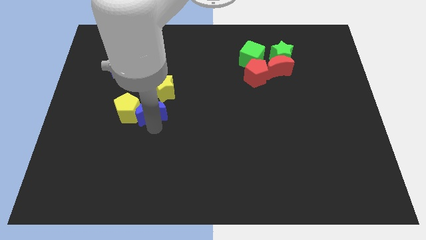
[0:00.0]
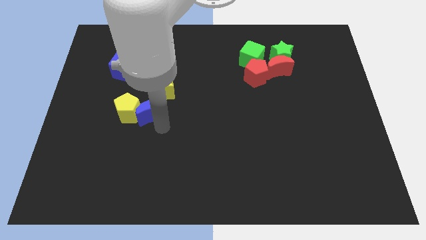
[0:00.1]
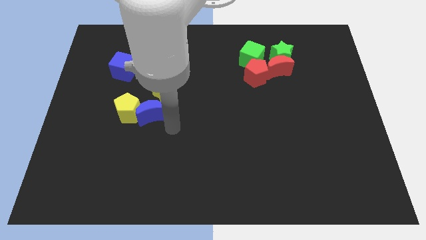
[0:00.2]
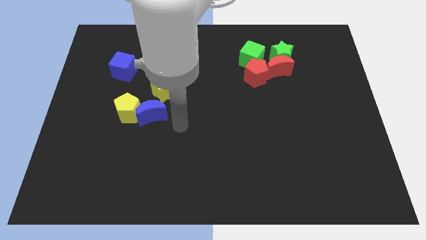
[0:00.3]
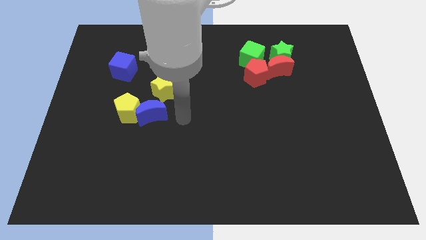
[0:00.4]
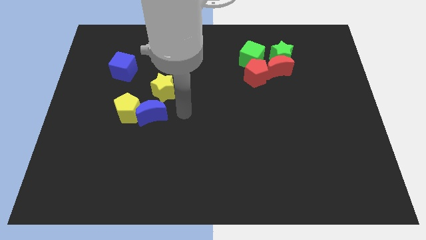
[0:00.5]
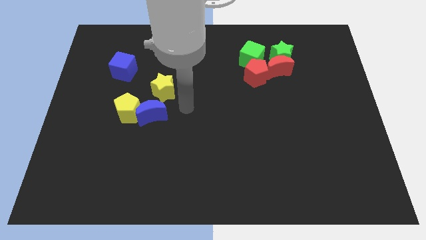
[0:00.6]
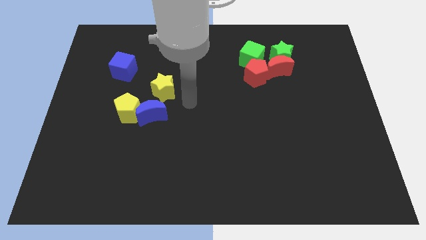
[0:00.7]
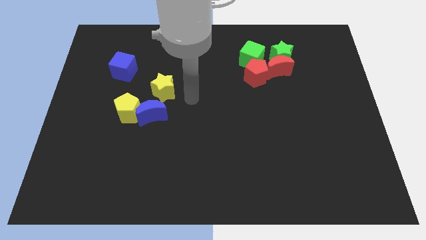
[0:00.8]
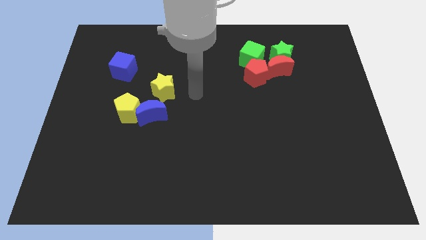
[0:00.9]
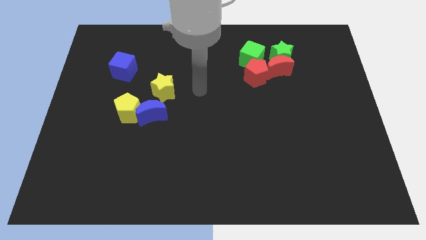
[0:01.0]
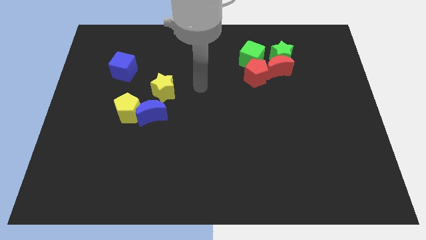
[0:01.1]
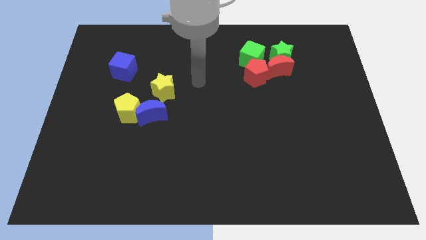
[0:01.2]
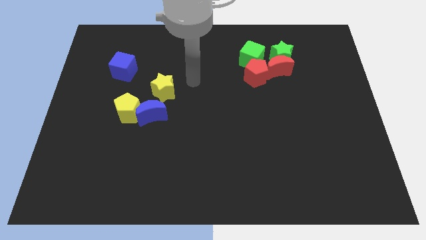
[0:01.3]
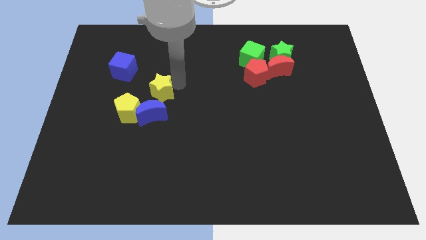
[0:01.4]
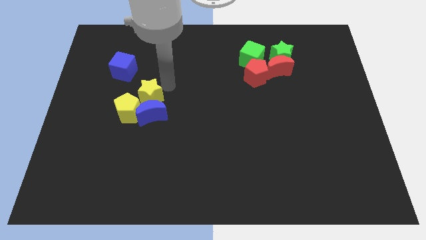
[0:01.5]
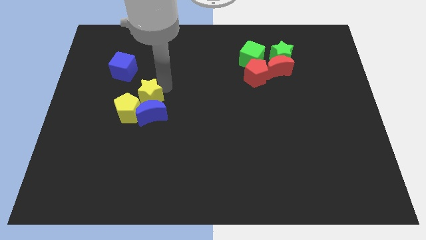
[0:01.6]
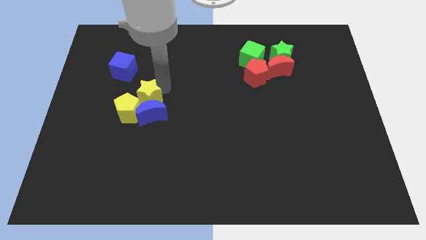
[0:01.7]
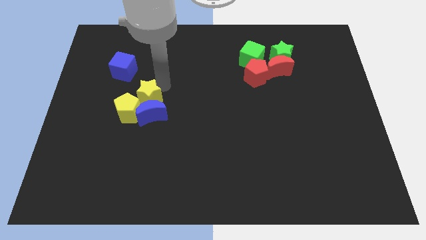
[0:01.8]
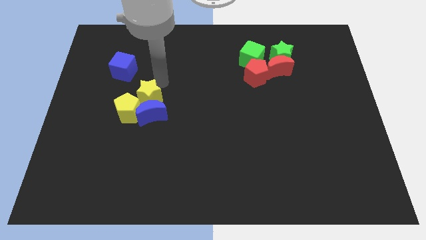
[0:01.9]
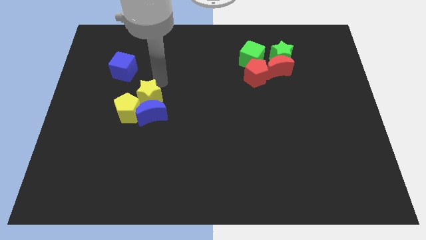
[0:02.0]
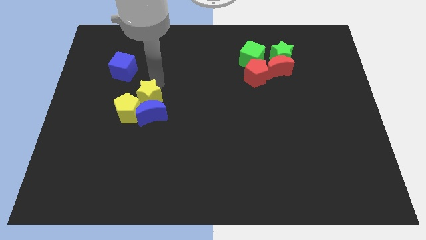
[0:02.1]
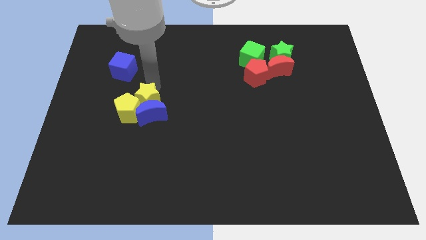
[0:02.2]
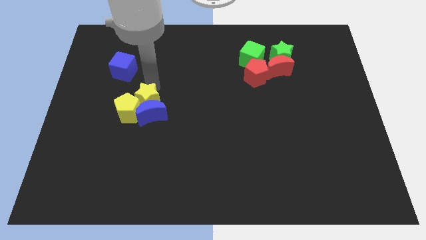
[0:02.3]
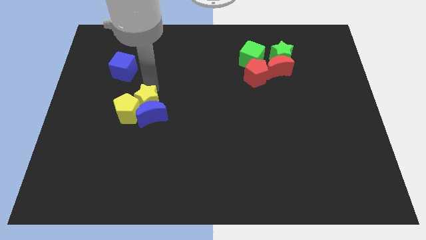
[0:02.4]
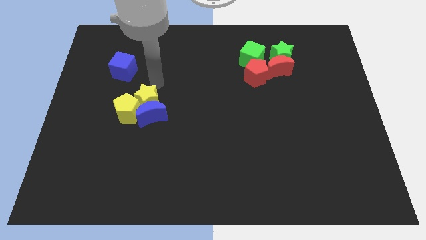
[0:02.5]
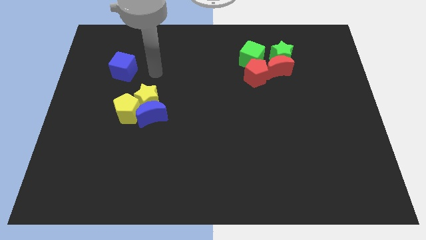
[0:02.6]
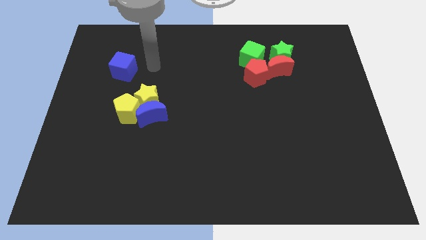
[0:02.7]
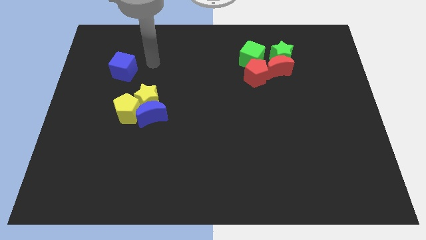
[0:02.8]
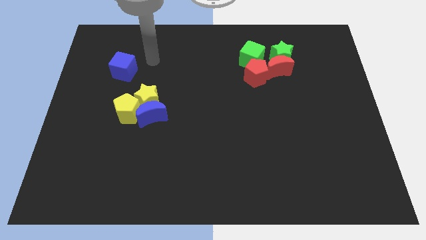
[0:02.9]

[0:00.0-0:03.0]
move the yellow star into the yellow pentagon and blue moon

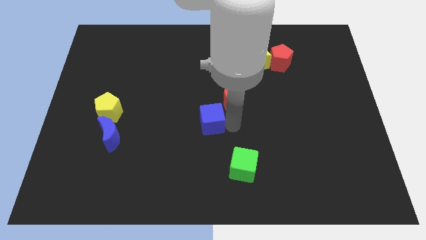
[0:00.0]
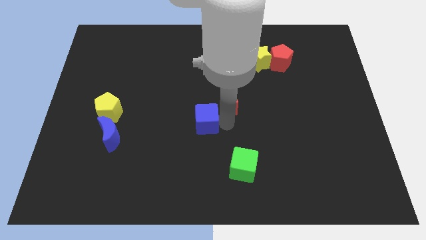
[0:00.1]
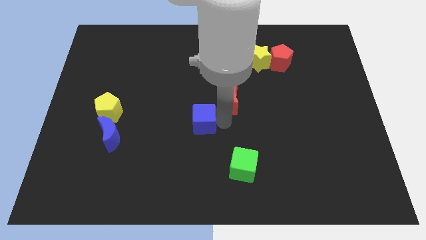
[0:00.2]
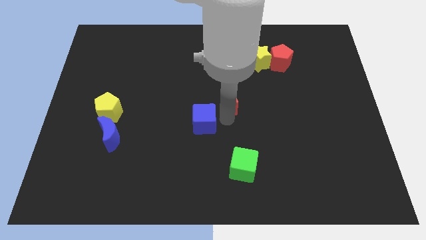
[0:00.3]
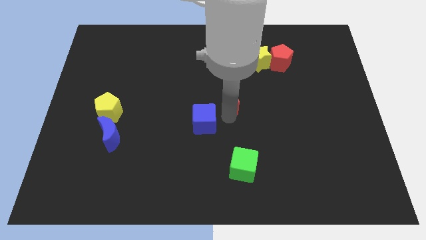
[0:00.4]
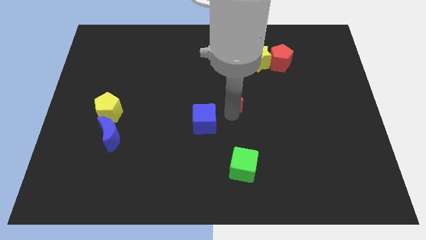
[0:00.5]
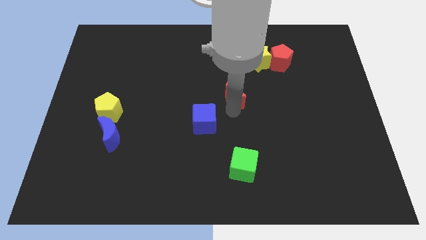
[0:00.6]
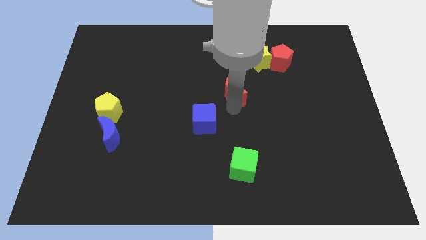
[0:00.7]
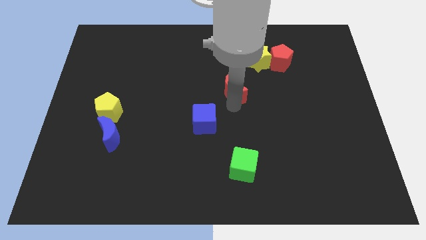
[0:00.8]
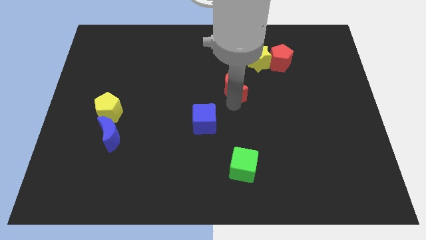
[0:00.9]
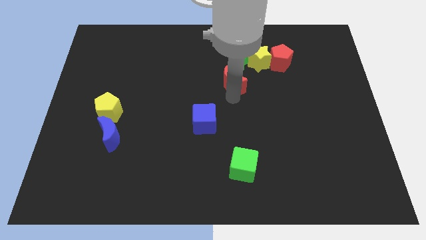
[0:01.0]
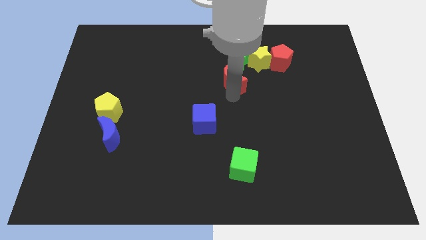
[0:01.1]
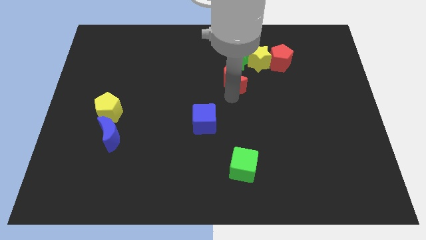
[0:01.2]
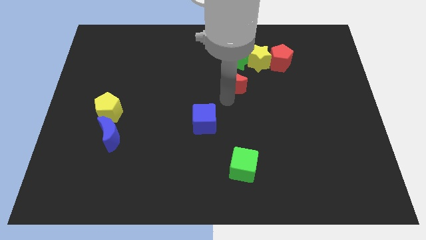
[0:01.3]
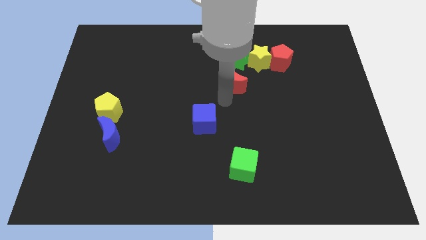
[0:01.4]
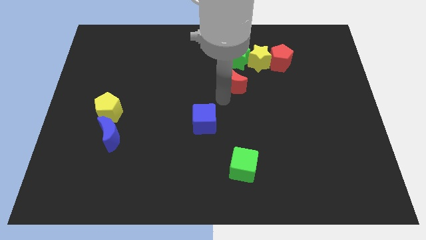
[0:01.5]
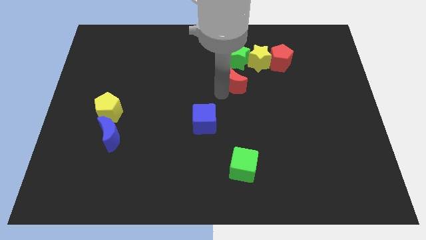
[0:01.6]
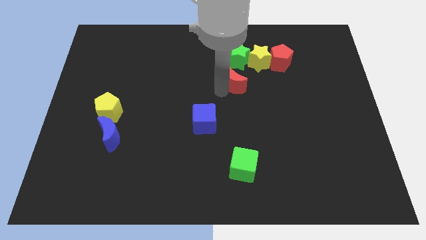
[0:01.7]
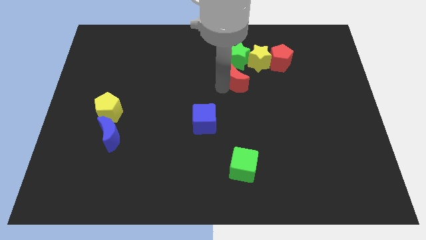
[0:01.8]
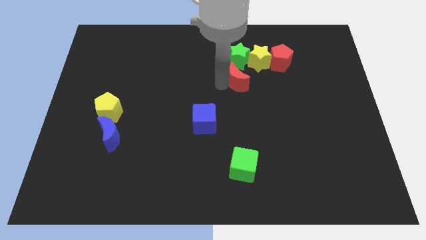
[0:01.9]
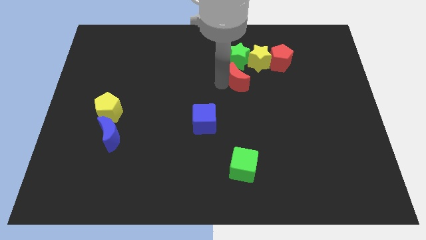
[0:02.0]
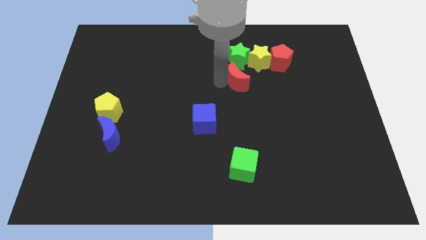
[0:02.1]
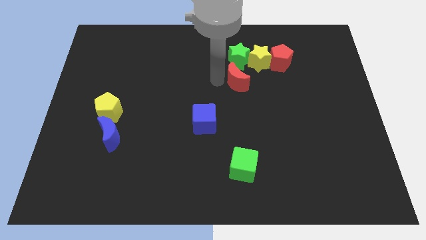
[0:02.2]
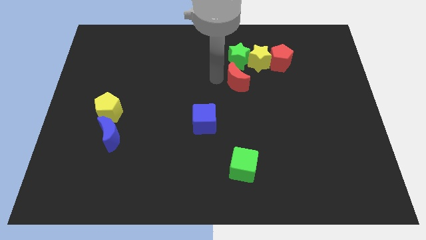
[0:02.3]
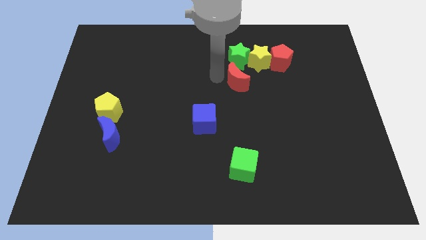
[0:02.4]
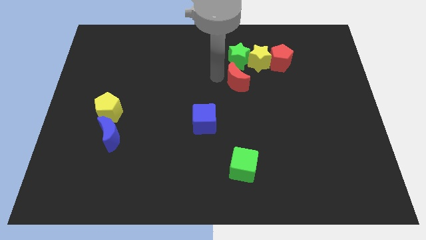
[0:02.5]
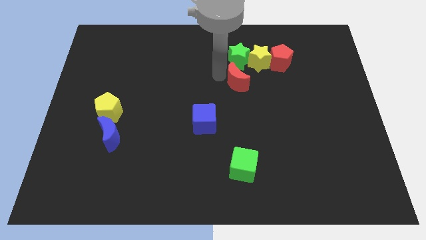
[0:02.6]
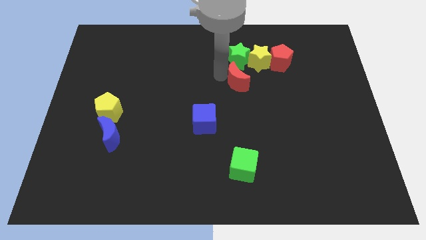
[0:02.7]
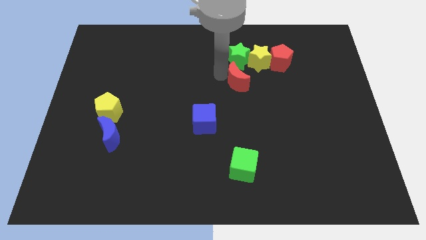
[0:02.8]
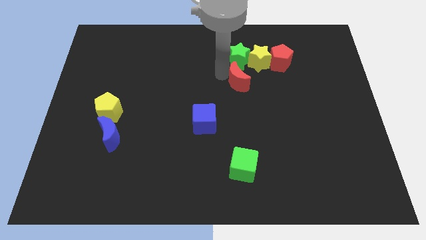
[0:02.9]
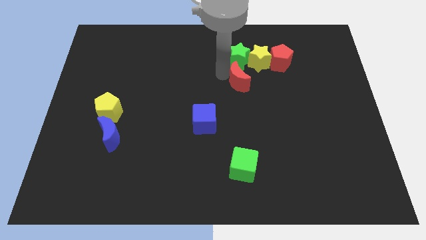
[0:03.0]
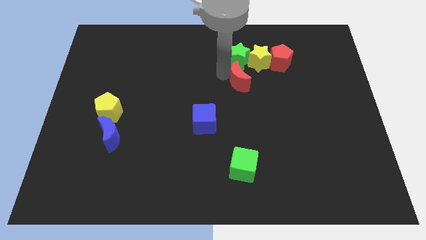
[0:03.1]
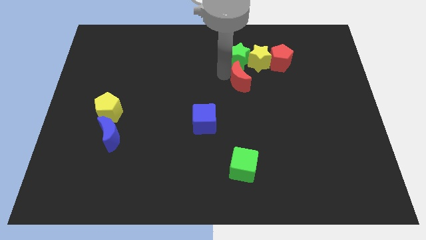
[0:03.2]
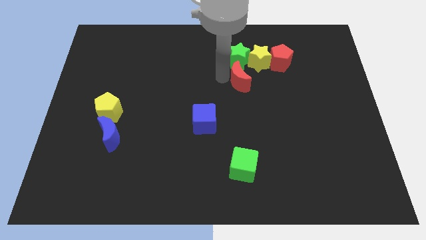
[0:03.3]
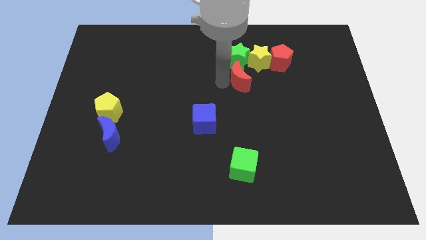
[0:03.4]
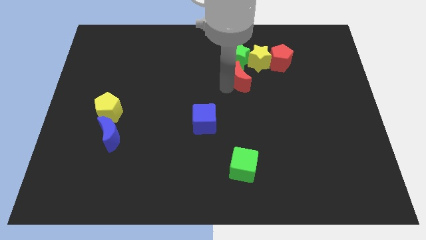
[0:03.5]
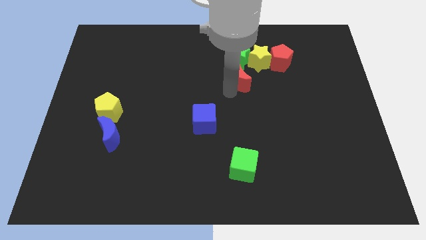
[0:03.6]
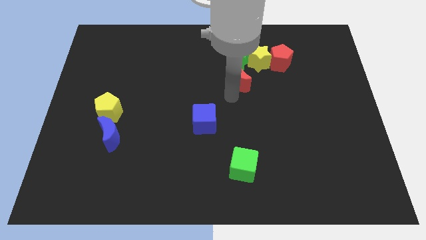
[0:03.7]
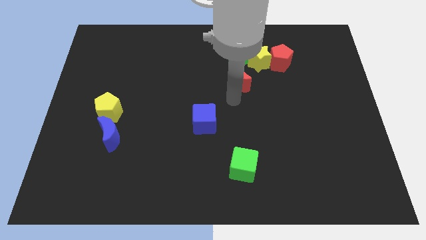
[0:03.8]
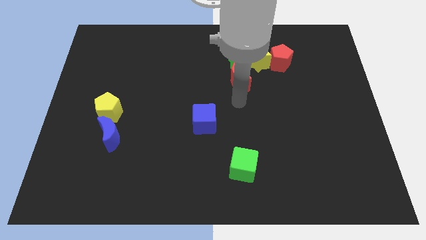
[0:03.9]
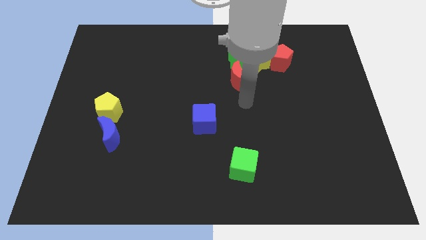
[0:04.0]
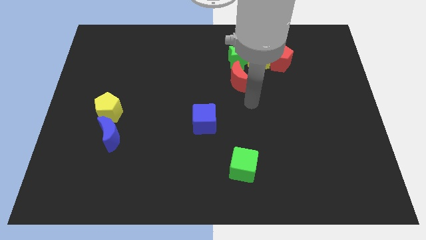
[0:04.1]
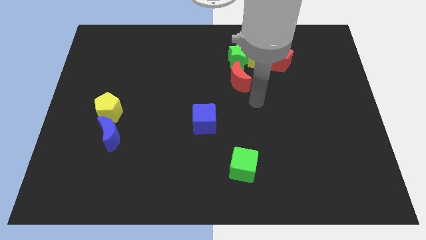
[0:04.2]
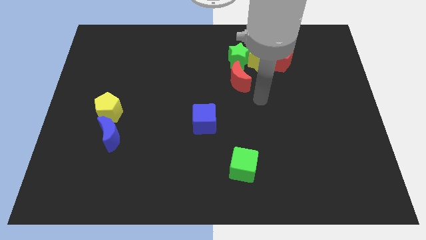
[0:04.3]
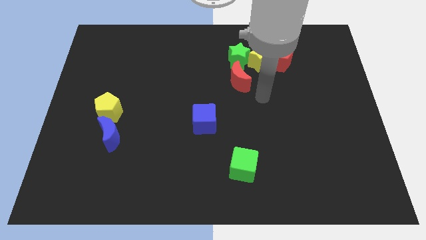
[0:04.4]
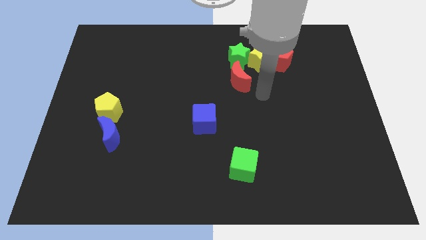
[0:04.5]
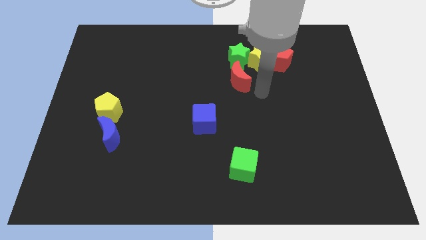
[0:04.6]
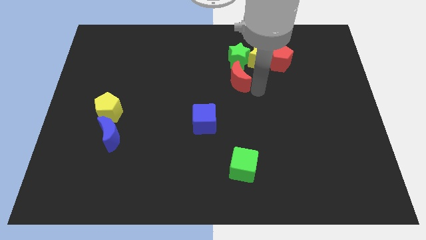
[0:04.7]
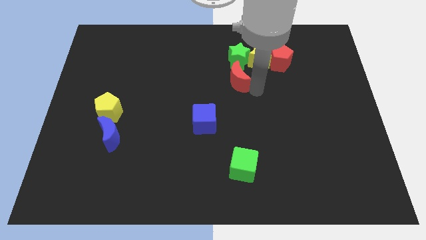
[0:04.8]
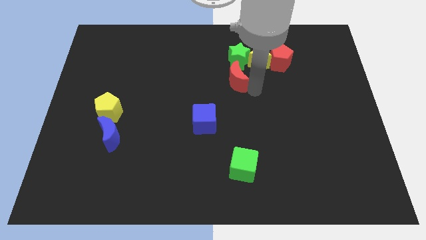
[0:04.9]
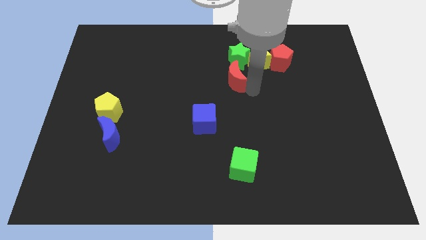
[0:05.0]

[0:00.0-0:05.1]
move the red crescent below the green star

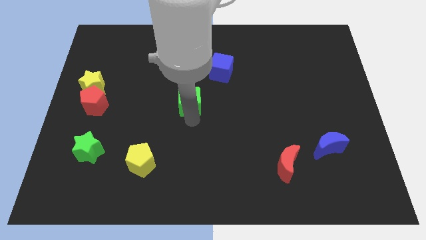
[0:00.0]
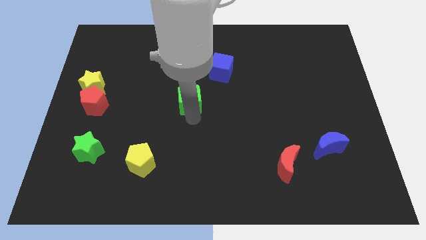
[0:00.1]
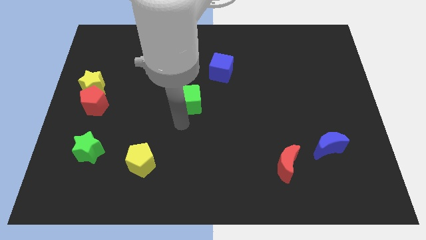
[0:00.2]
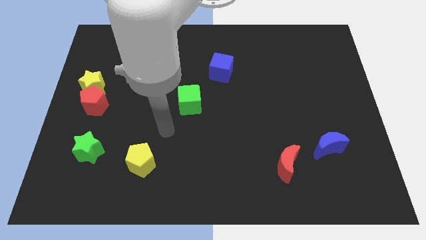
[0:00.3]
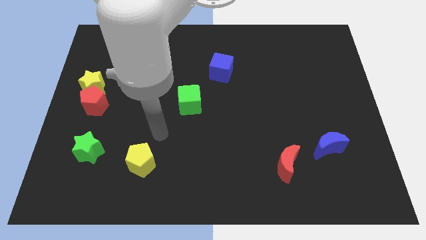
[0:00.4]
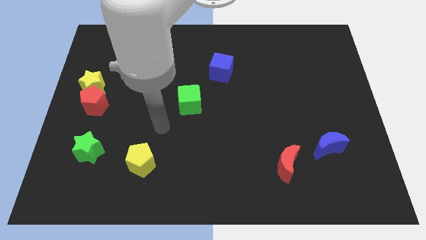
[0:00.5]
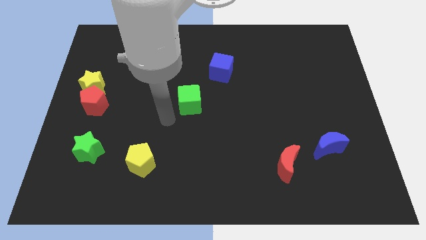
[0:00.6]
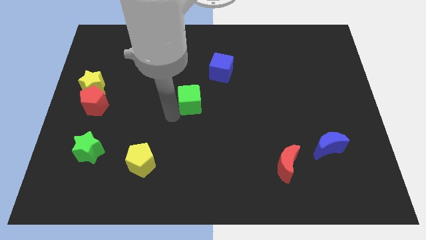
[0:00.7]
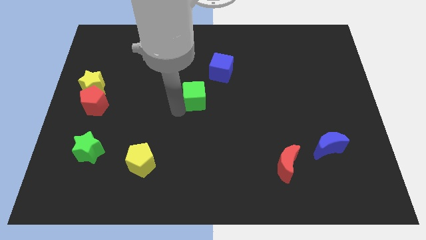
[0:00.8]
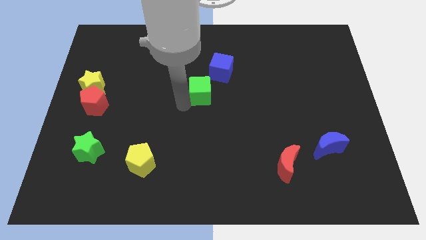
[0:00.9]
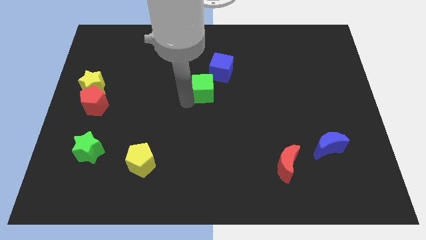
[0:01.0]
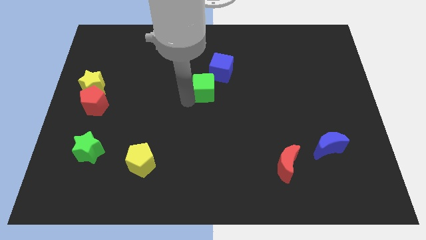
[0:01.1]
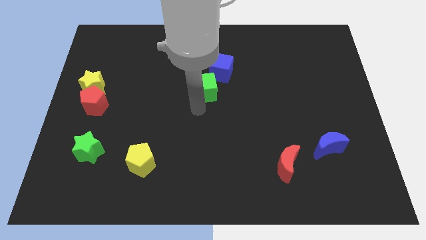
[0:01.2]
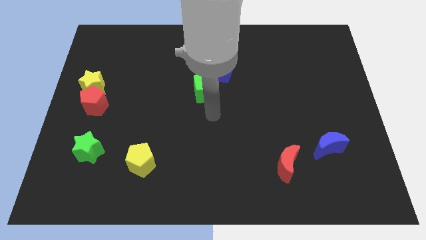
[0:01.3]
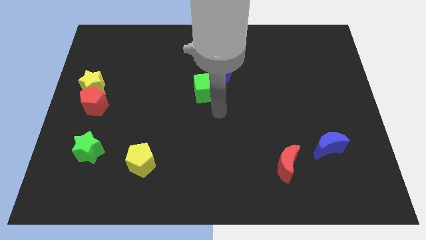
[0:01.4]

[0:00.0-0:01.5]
move green cube towards blue cube
